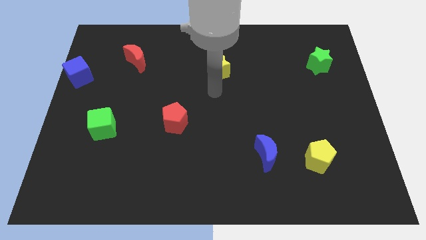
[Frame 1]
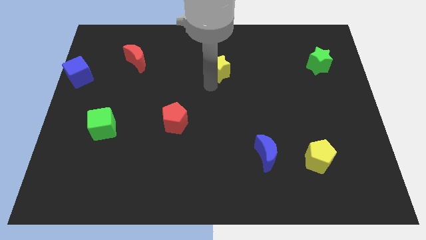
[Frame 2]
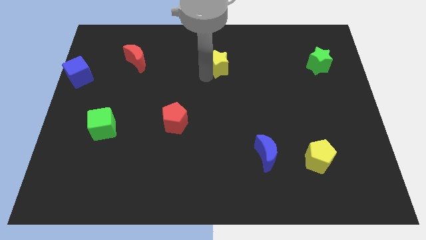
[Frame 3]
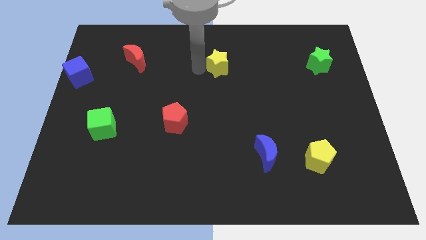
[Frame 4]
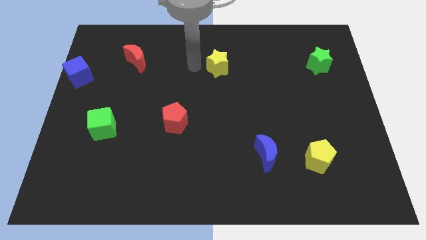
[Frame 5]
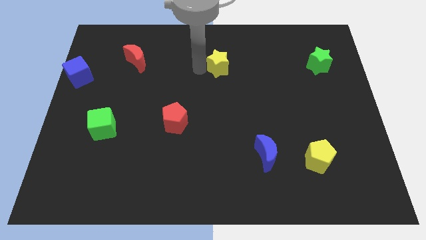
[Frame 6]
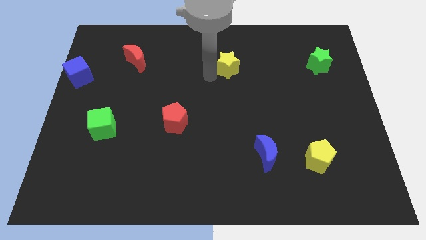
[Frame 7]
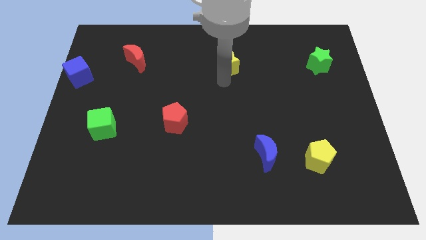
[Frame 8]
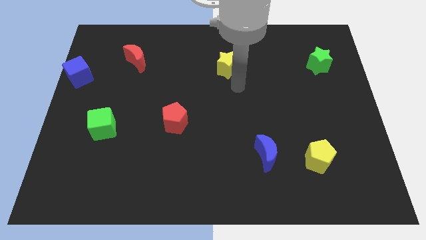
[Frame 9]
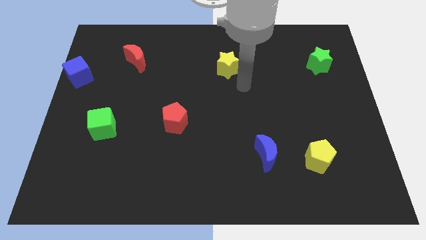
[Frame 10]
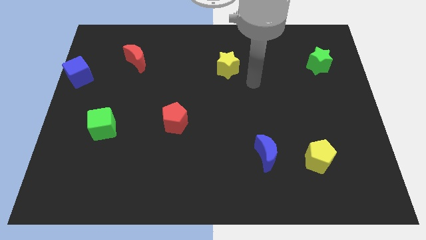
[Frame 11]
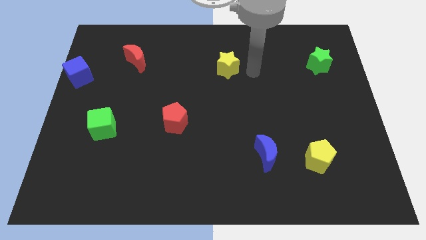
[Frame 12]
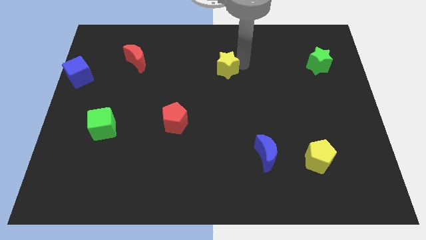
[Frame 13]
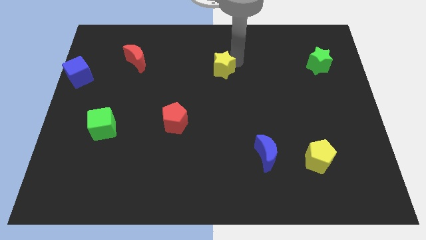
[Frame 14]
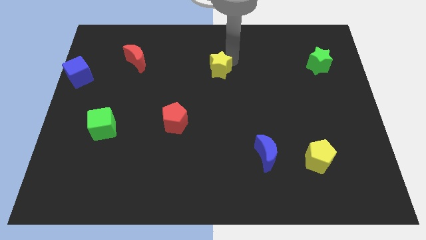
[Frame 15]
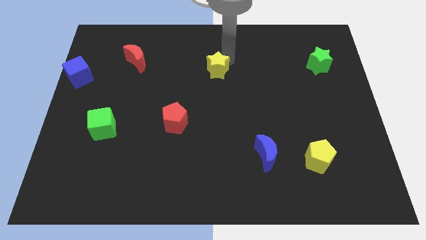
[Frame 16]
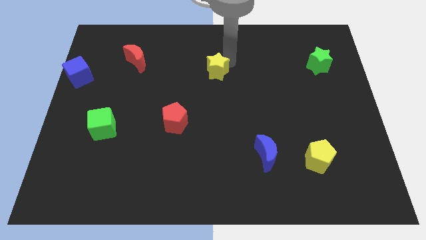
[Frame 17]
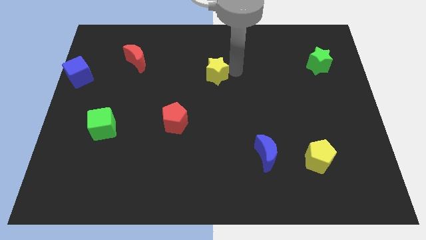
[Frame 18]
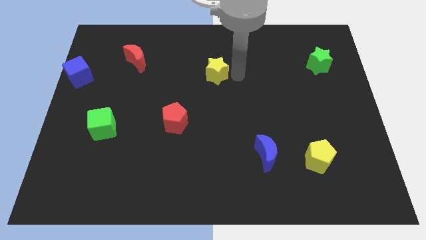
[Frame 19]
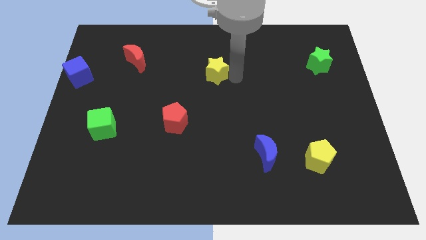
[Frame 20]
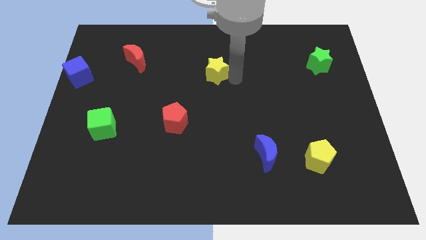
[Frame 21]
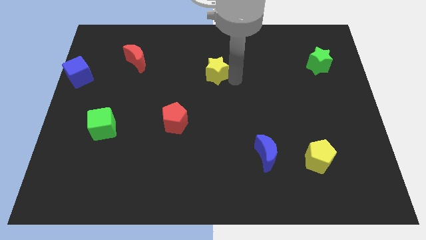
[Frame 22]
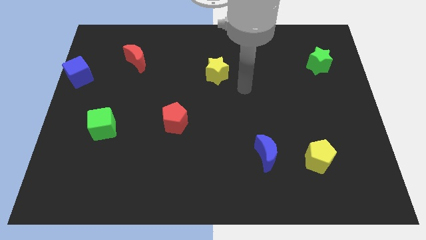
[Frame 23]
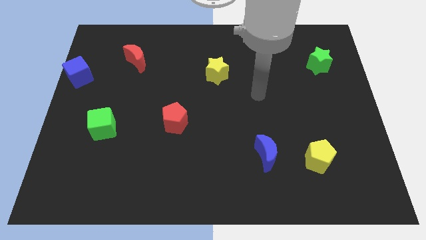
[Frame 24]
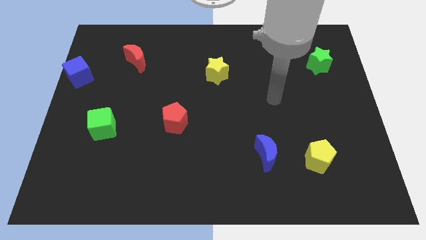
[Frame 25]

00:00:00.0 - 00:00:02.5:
push the yellow star diagonal to red pentagon

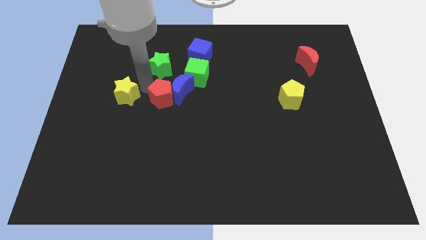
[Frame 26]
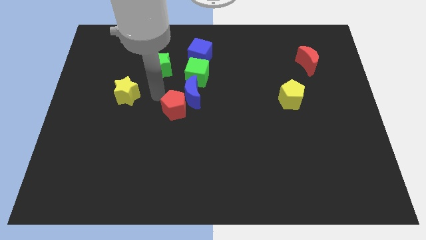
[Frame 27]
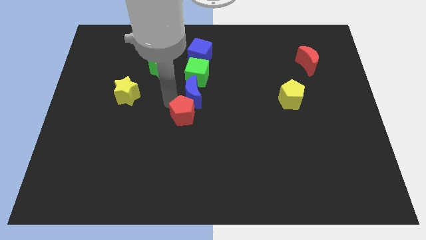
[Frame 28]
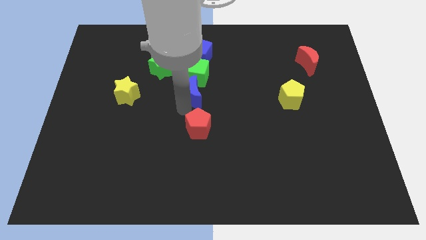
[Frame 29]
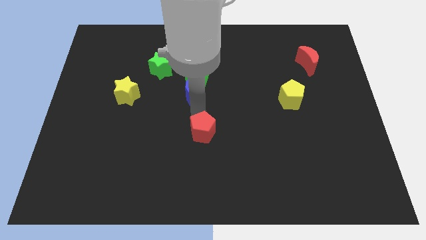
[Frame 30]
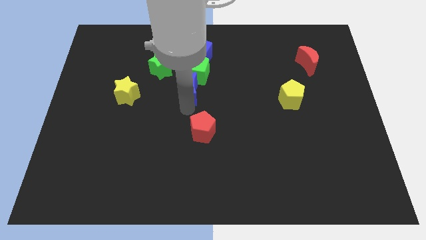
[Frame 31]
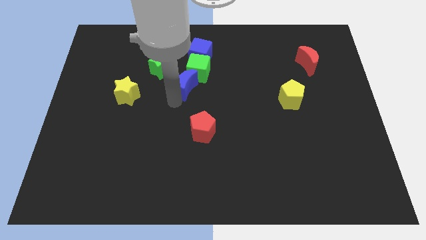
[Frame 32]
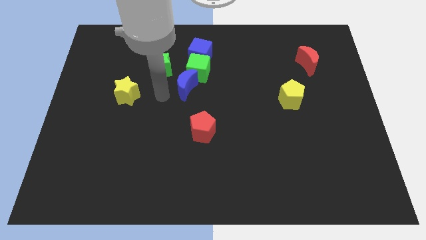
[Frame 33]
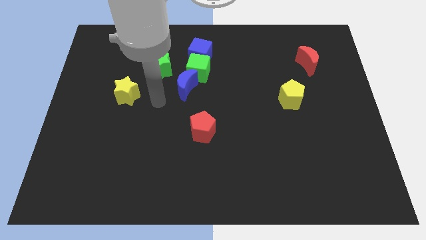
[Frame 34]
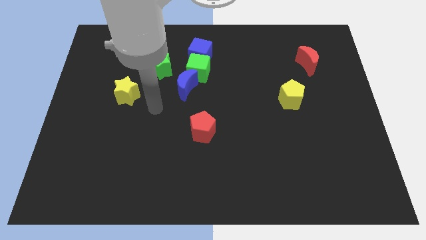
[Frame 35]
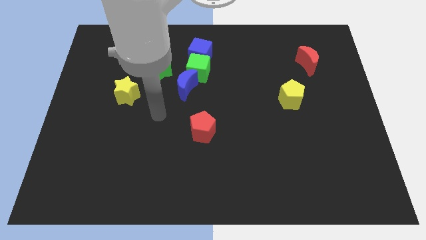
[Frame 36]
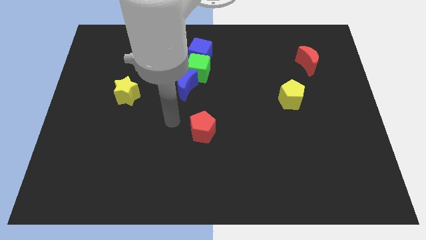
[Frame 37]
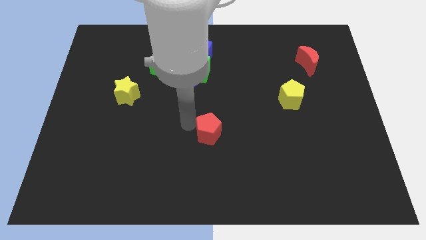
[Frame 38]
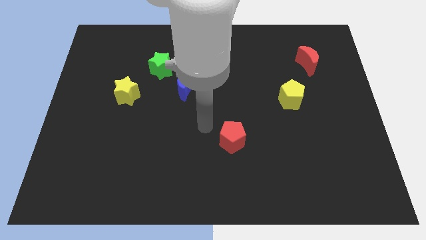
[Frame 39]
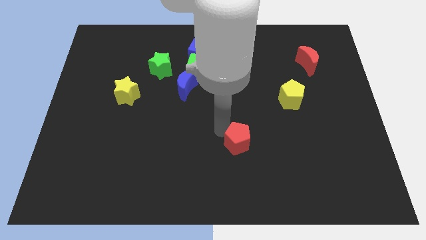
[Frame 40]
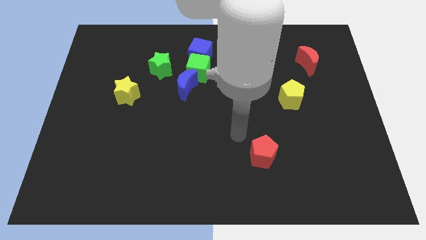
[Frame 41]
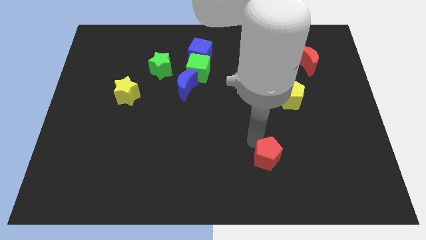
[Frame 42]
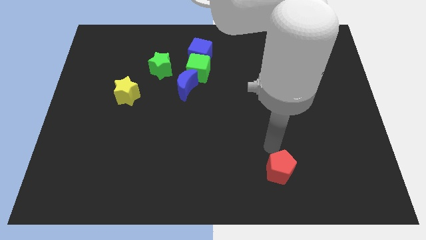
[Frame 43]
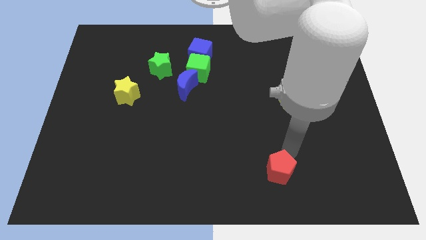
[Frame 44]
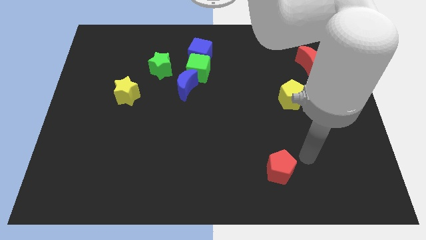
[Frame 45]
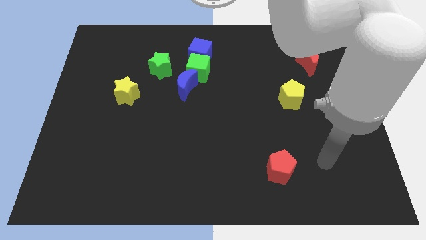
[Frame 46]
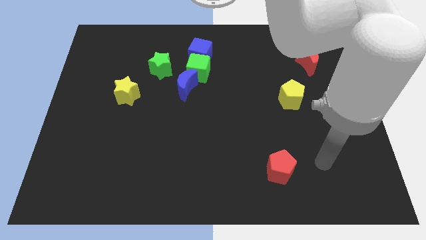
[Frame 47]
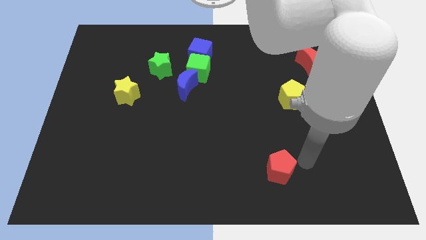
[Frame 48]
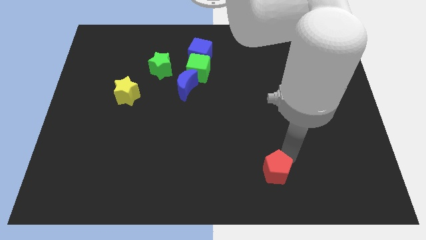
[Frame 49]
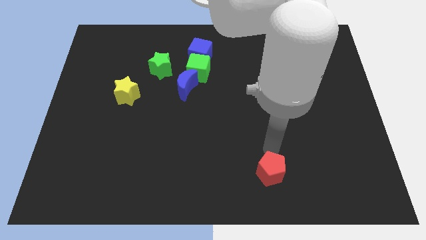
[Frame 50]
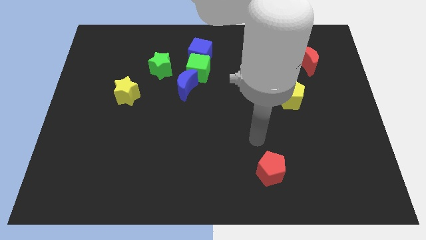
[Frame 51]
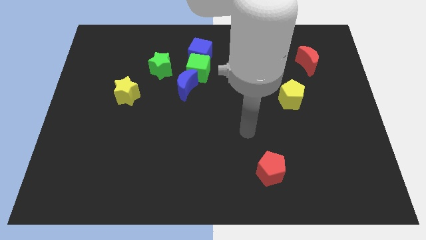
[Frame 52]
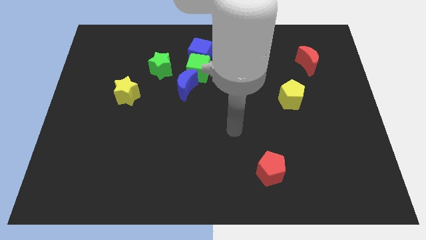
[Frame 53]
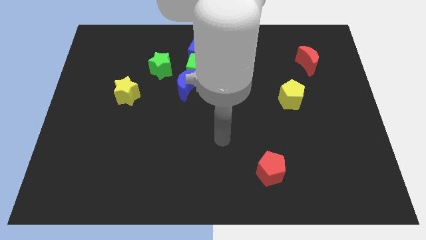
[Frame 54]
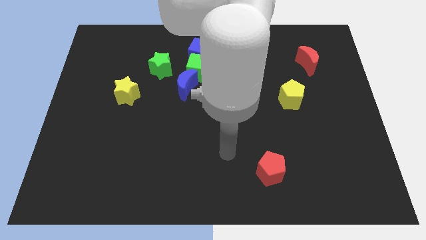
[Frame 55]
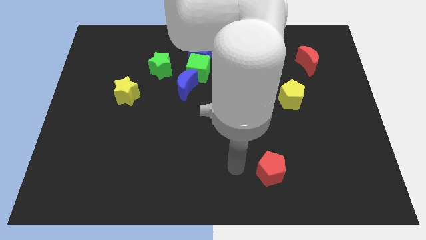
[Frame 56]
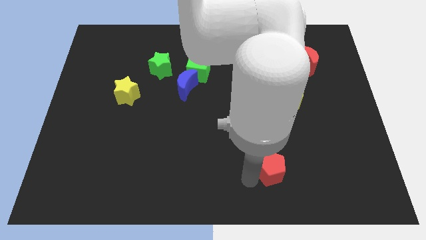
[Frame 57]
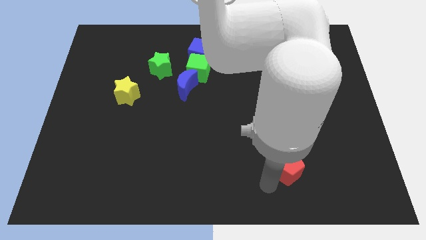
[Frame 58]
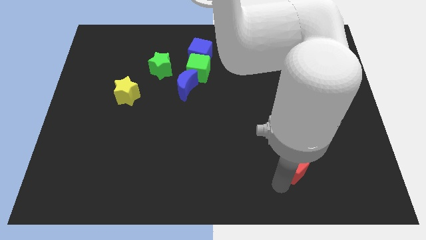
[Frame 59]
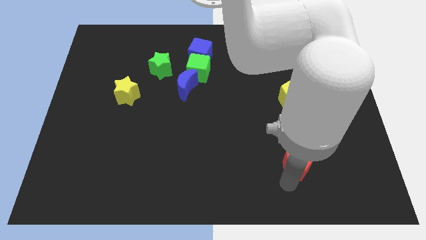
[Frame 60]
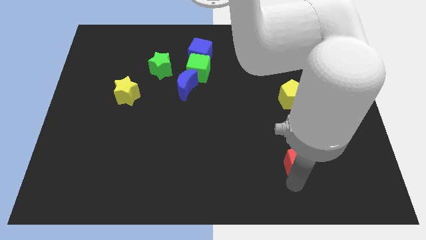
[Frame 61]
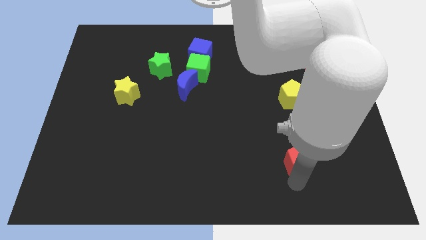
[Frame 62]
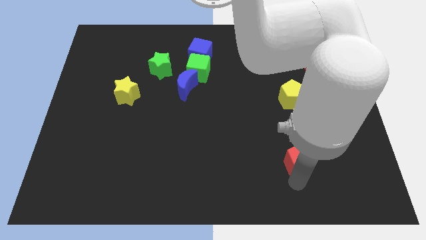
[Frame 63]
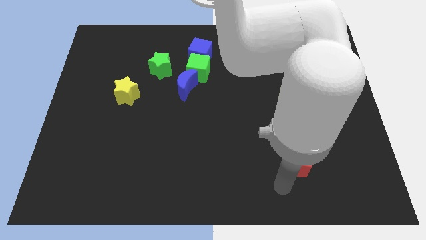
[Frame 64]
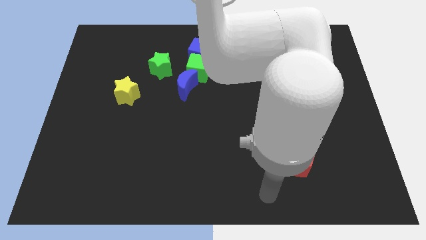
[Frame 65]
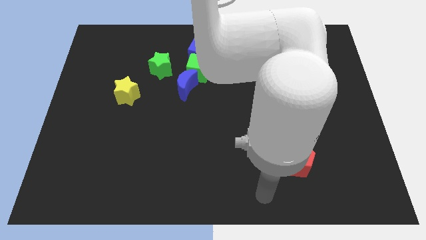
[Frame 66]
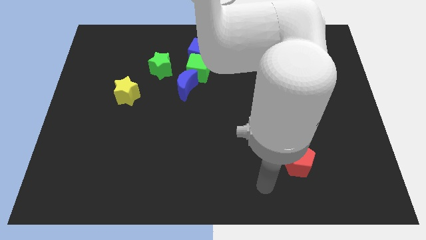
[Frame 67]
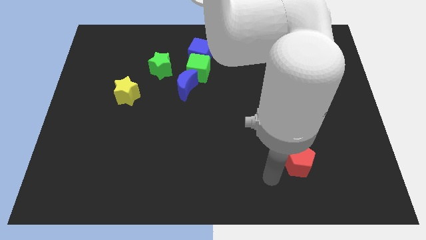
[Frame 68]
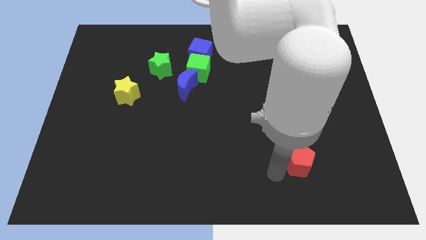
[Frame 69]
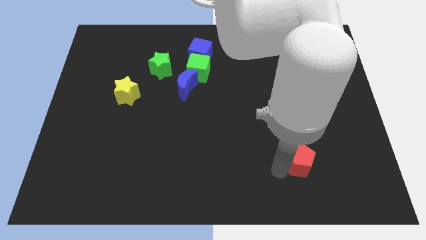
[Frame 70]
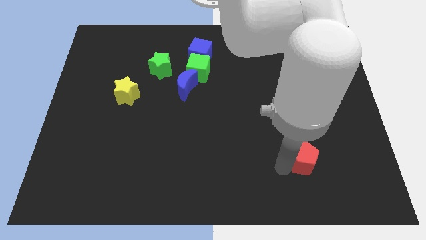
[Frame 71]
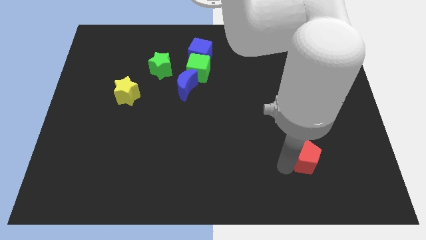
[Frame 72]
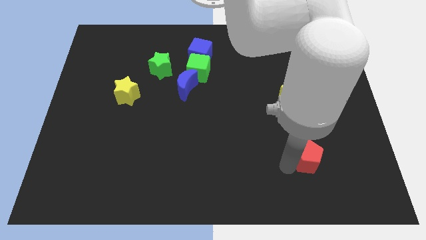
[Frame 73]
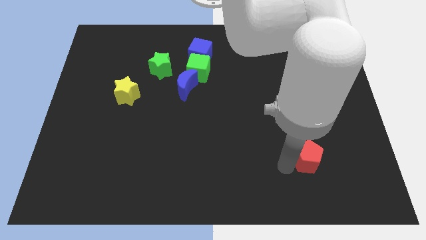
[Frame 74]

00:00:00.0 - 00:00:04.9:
place the red pentagon down to the yellow pentagon

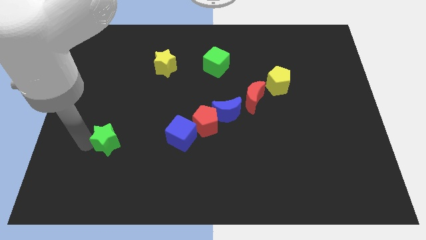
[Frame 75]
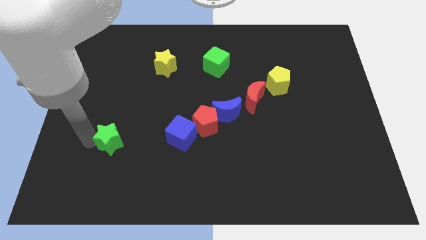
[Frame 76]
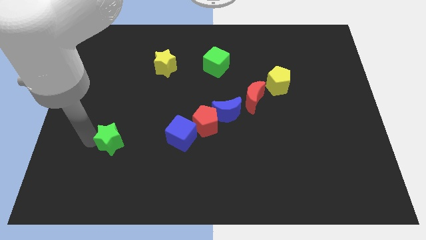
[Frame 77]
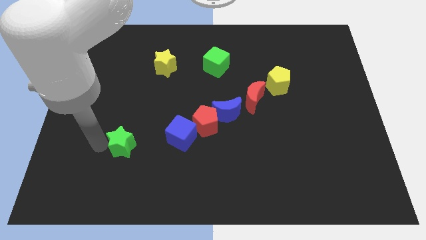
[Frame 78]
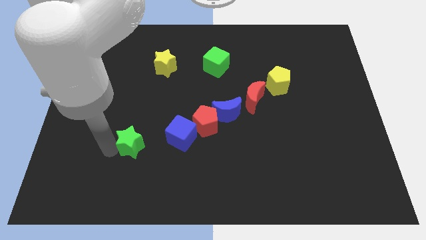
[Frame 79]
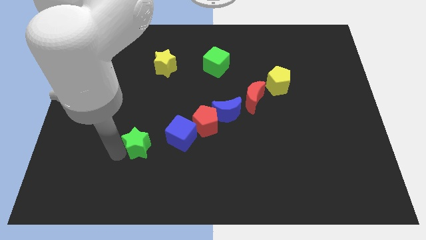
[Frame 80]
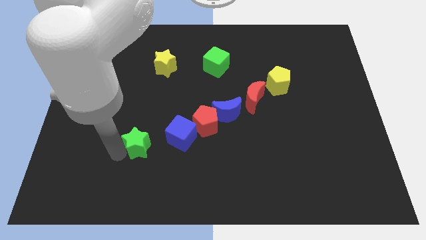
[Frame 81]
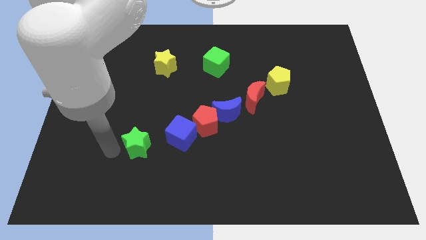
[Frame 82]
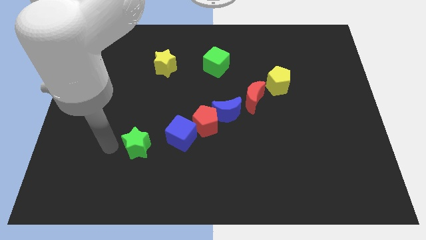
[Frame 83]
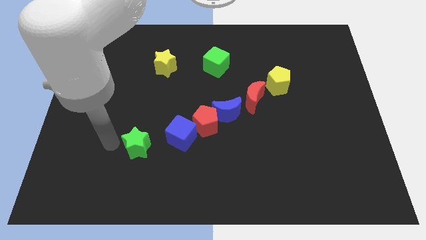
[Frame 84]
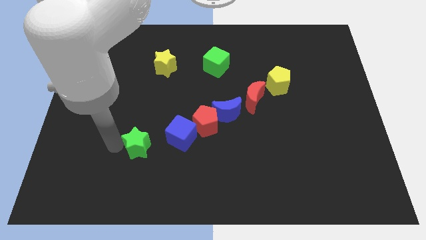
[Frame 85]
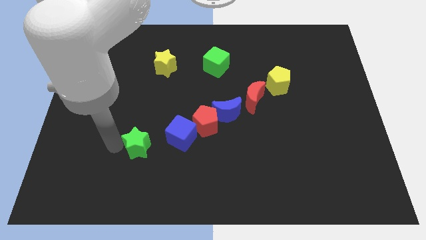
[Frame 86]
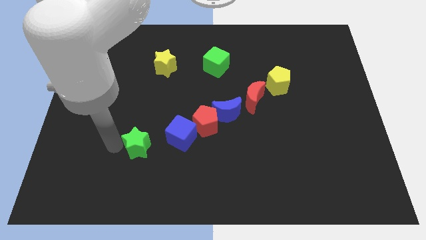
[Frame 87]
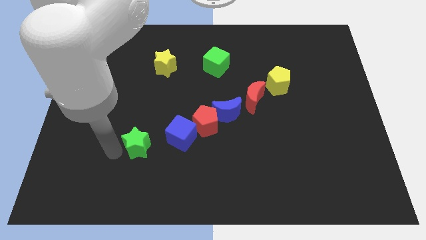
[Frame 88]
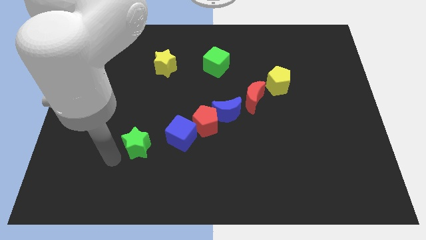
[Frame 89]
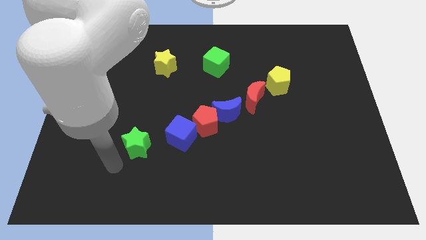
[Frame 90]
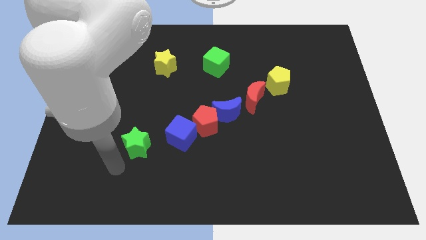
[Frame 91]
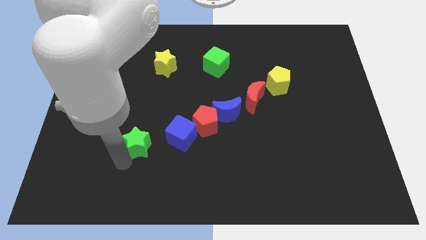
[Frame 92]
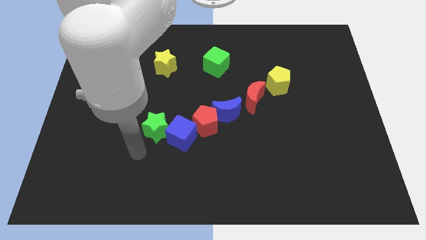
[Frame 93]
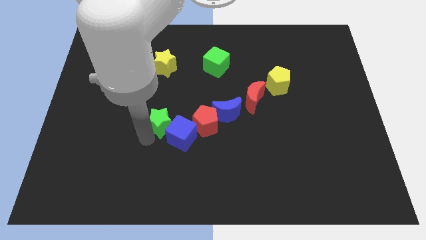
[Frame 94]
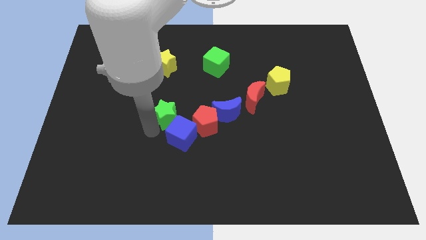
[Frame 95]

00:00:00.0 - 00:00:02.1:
move the green star into the blue cube
